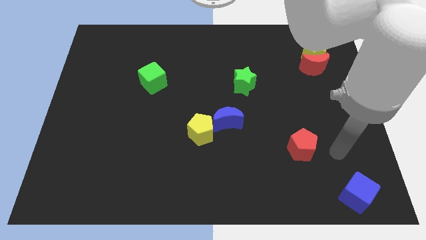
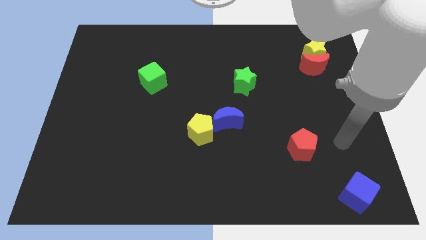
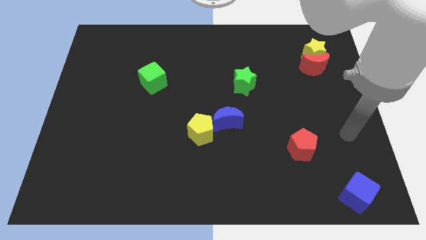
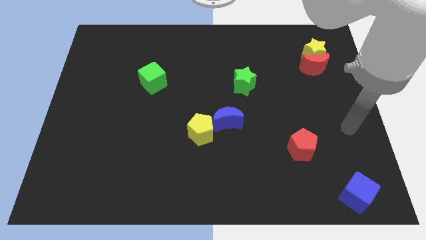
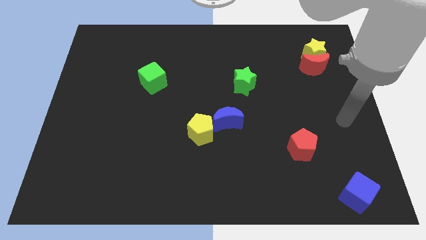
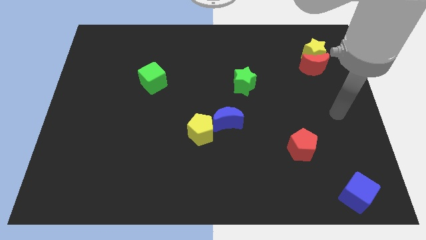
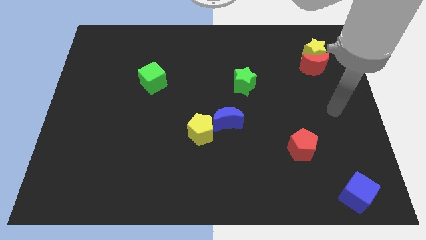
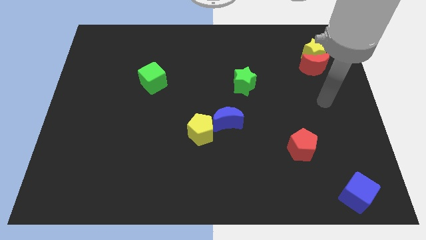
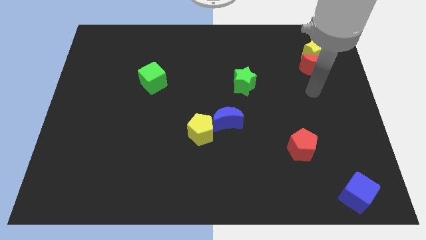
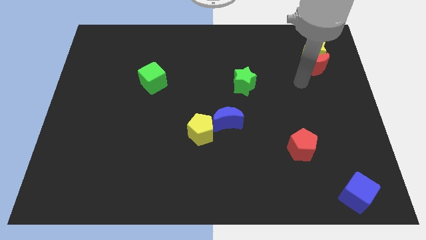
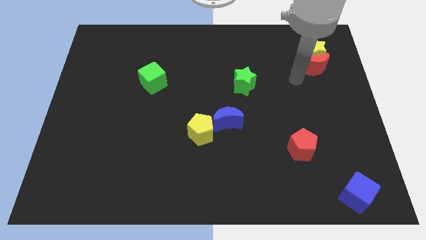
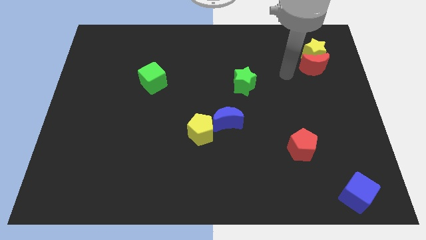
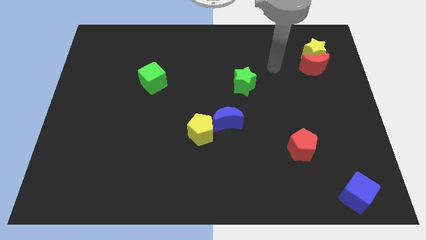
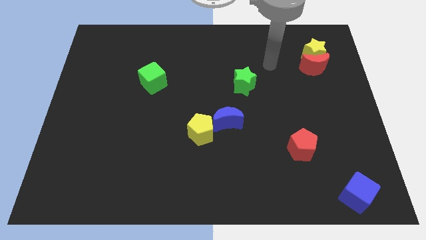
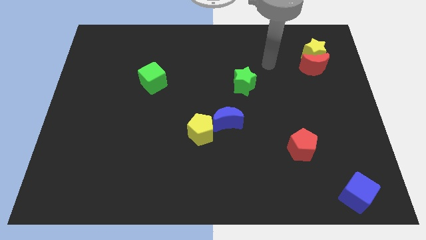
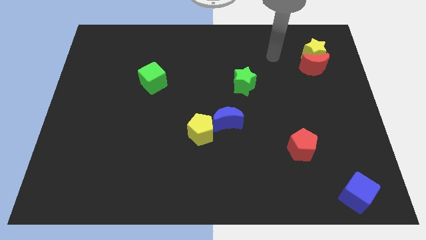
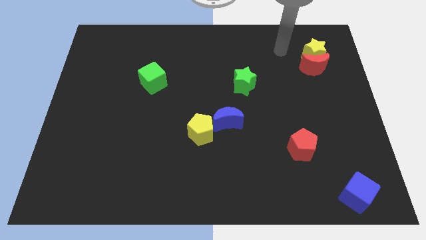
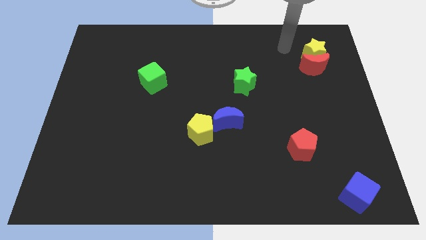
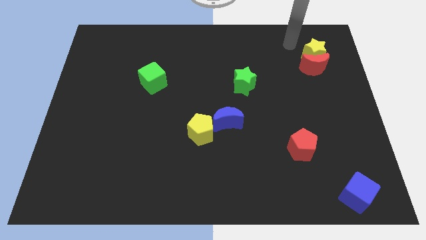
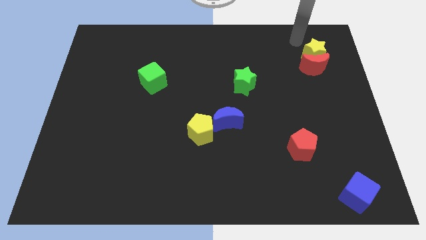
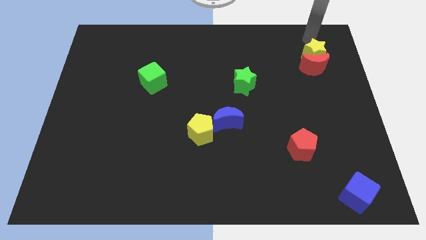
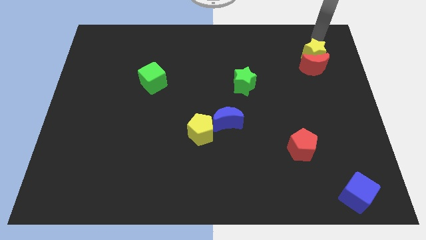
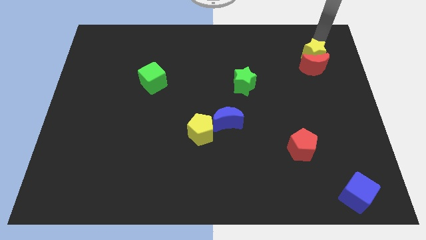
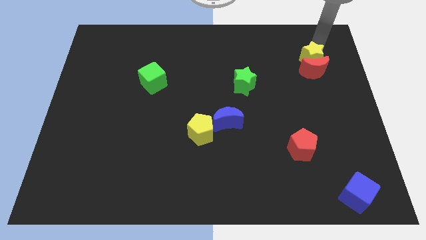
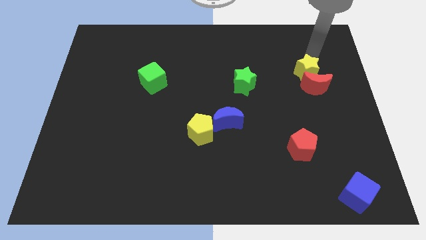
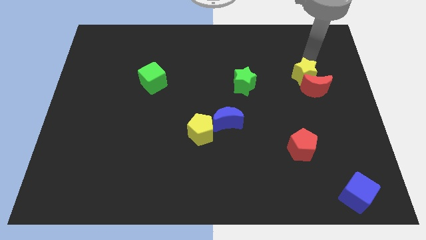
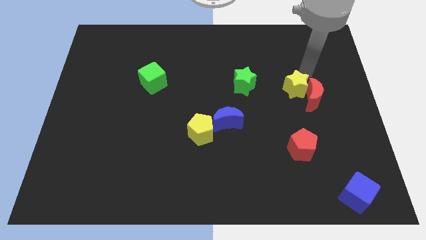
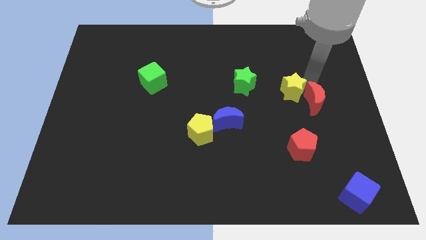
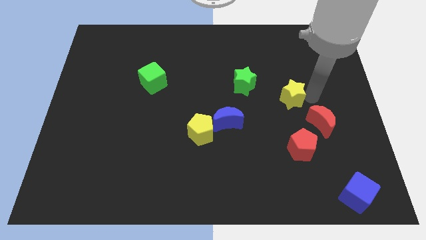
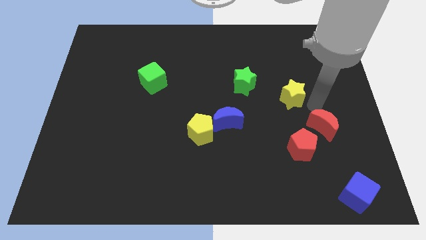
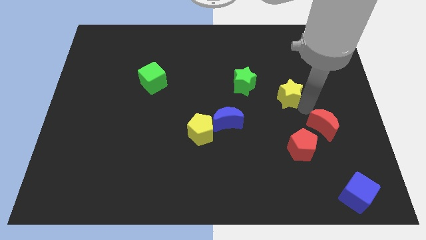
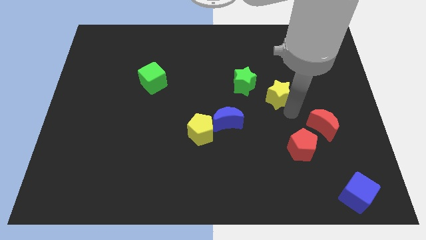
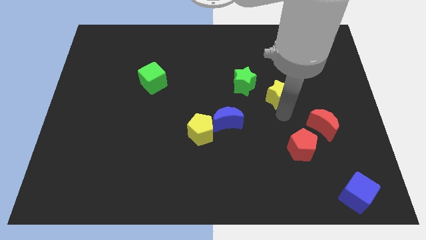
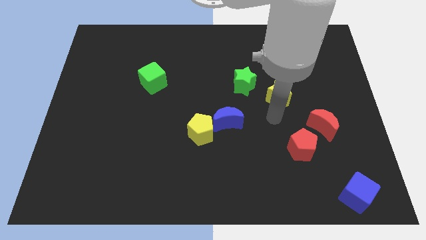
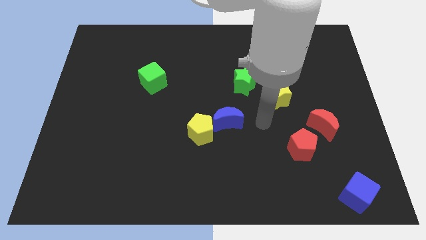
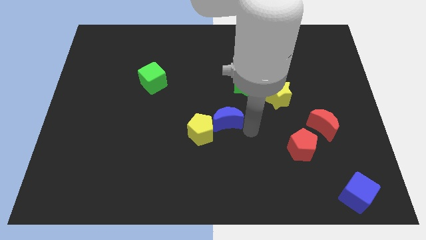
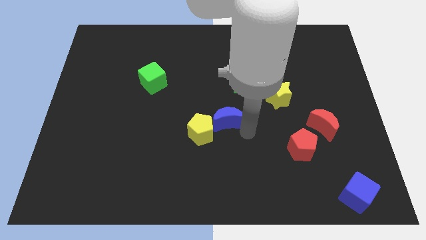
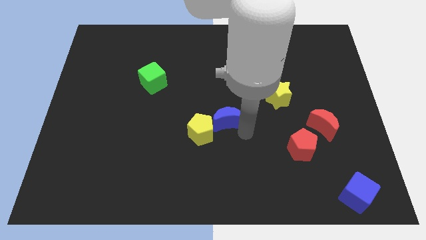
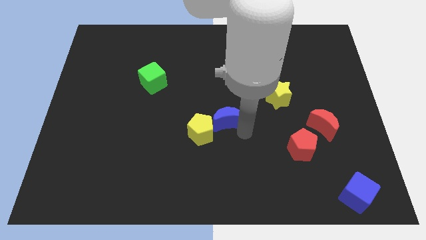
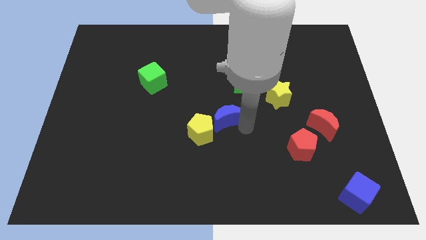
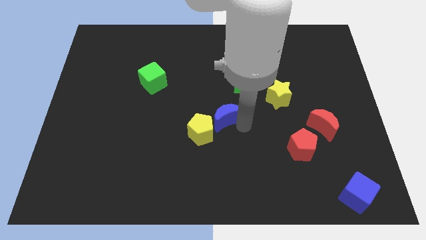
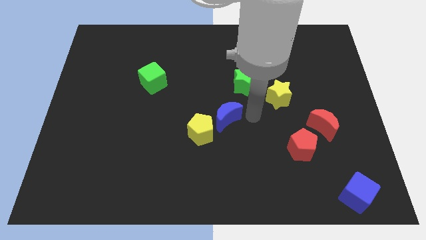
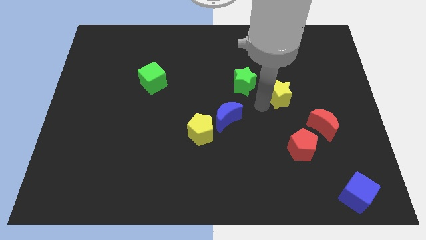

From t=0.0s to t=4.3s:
move the yellow star towards the center of the board

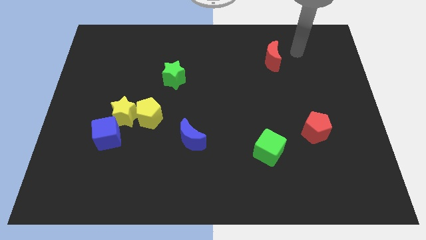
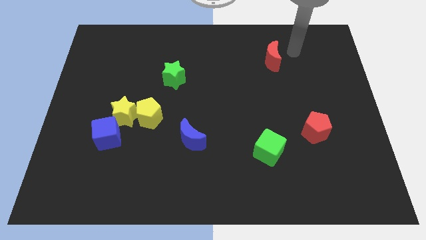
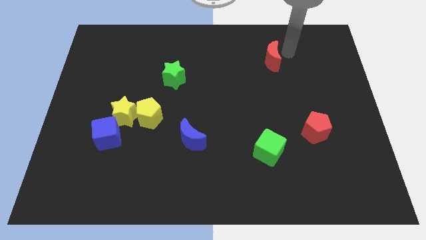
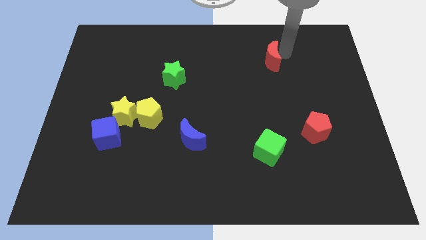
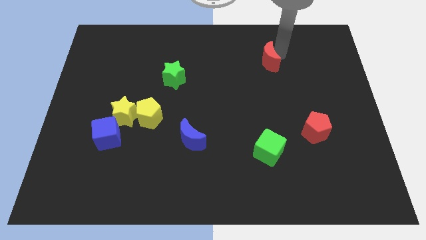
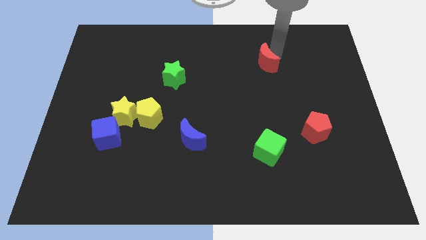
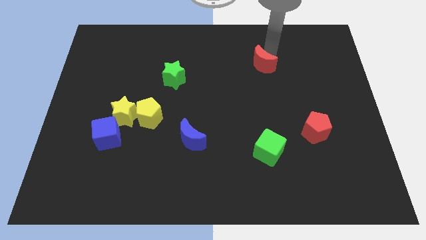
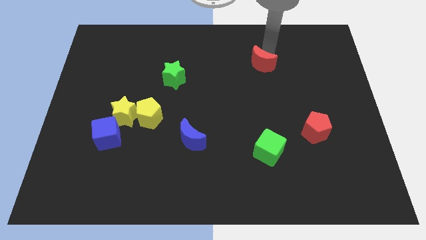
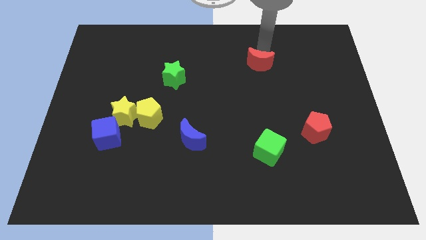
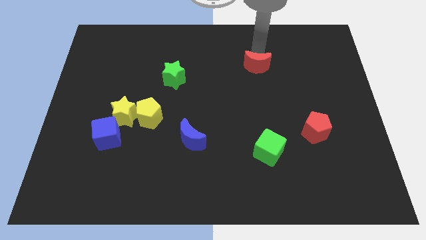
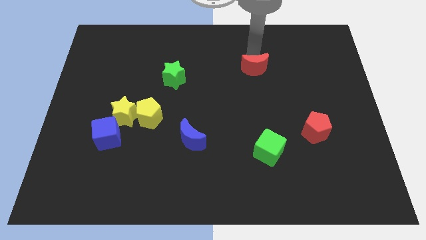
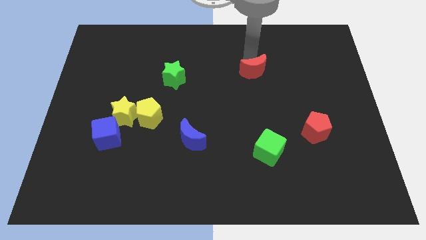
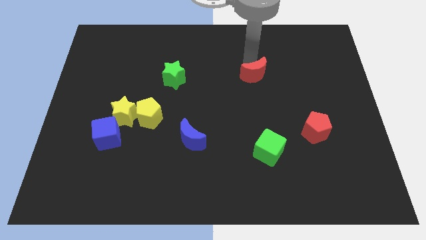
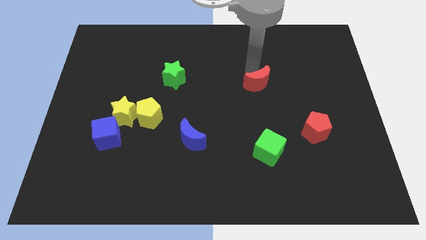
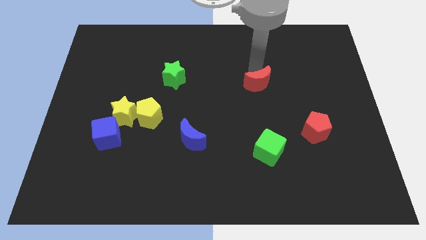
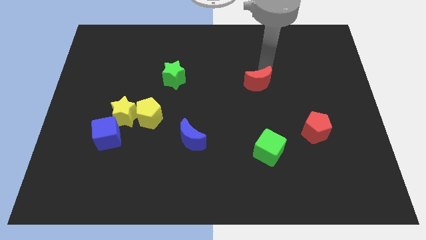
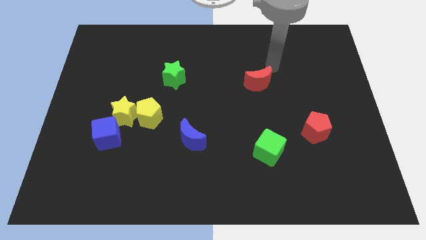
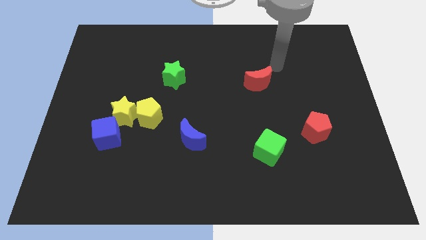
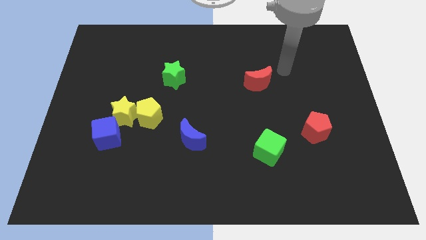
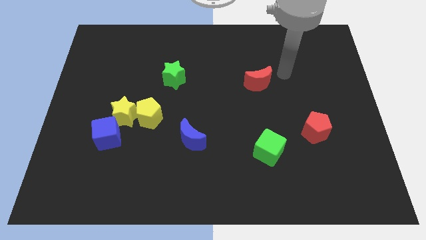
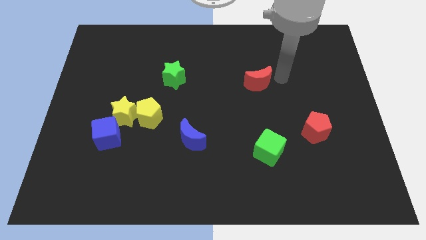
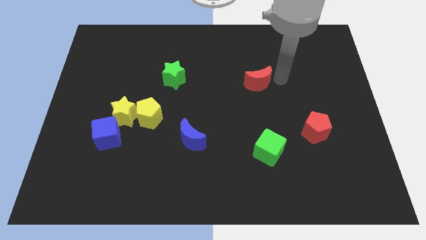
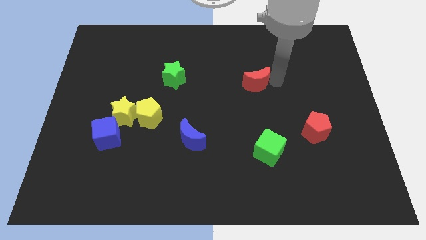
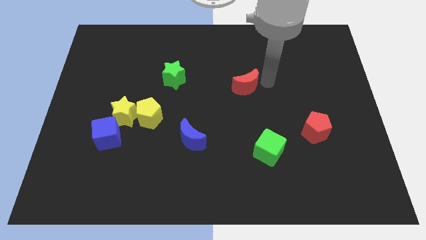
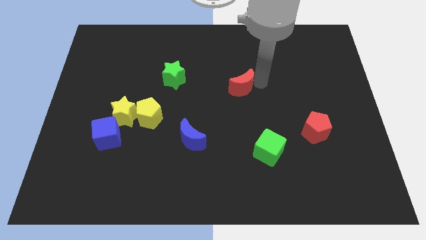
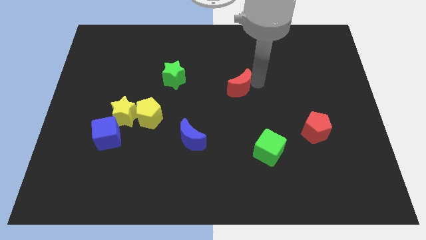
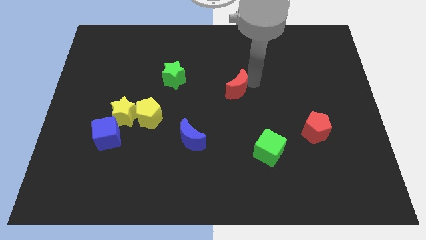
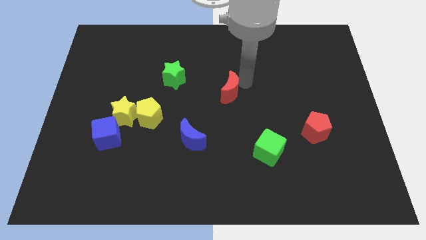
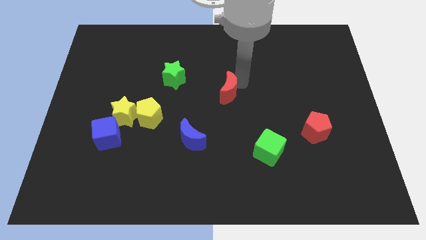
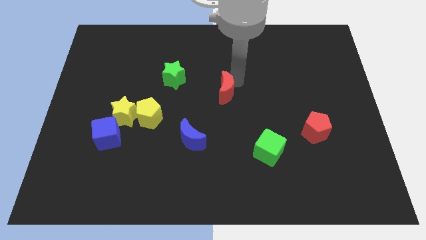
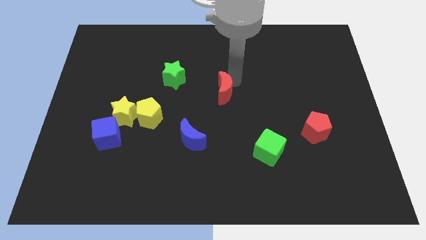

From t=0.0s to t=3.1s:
place the red moon diagonally to the left of the green cube

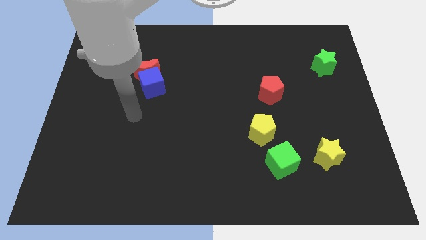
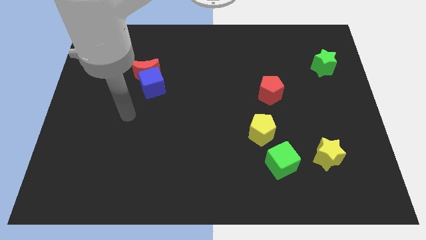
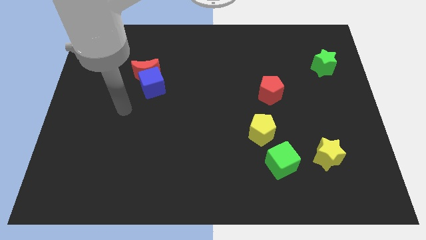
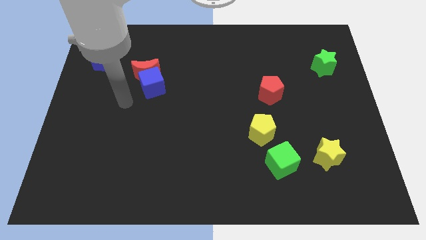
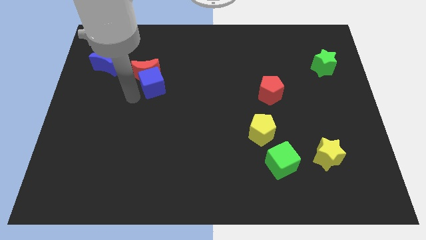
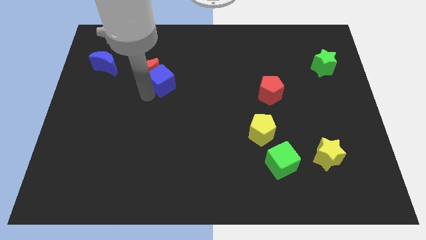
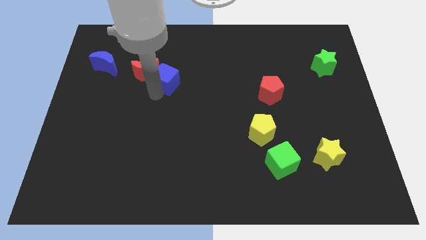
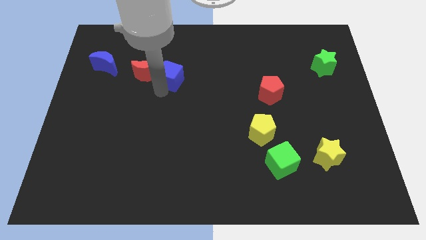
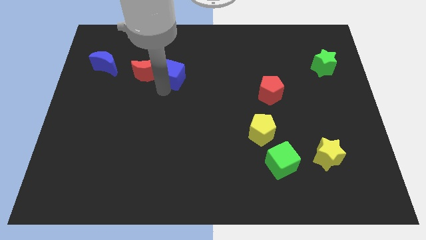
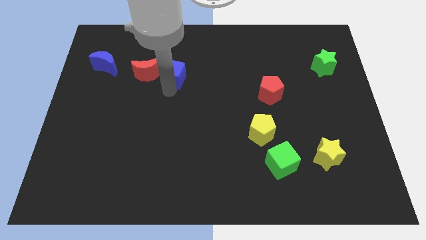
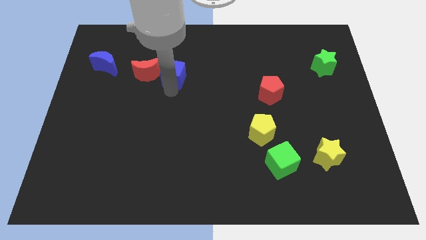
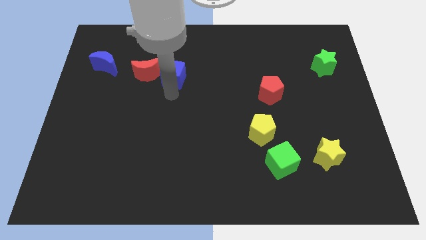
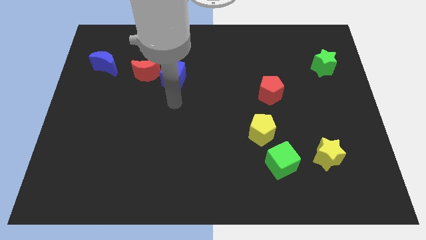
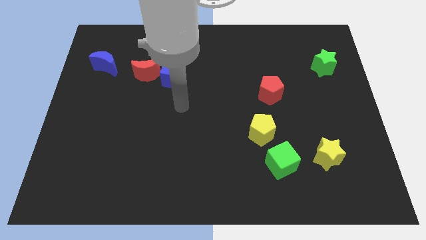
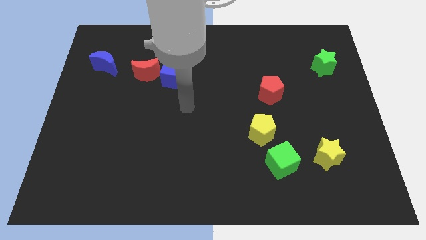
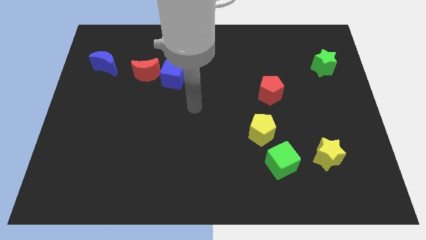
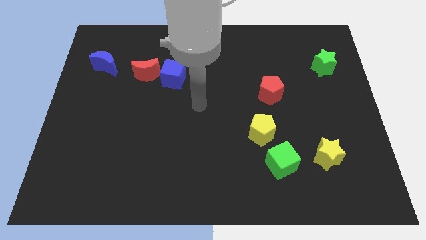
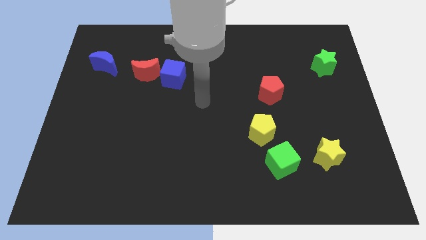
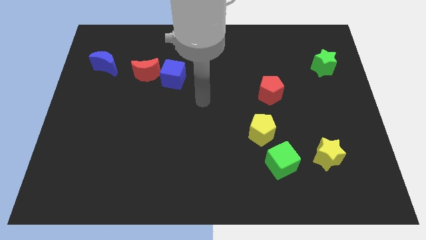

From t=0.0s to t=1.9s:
slide the blue cube to the right of the red moon
